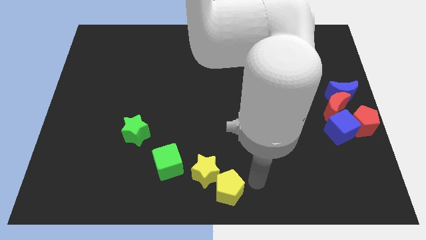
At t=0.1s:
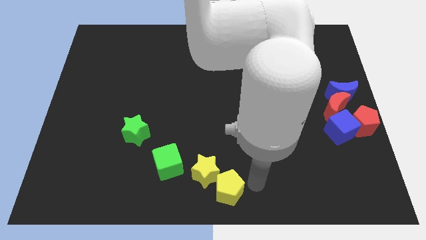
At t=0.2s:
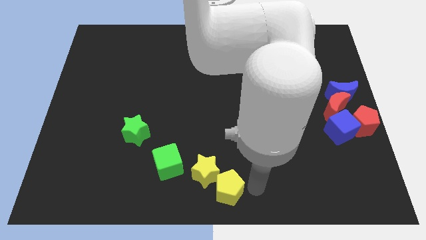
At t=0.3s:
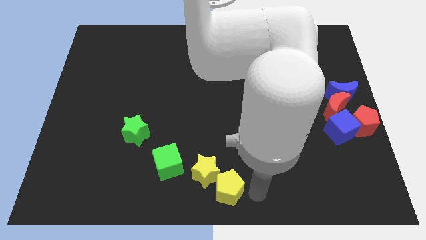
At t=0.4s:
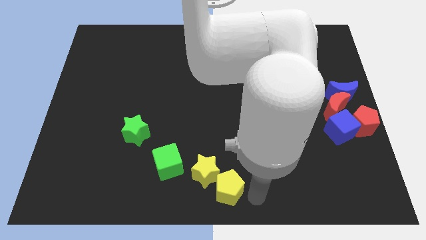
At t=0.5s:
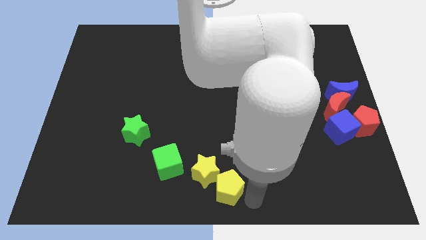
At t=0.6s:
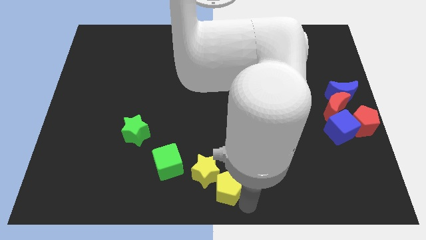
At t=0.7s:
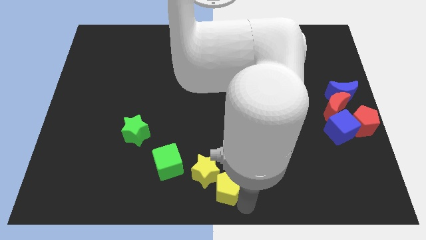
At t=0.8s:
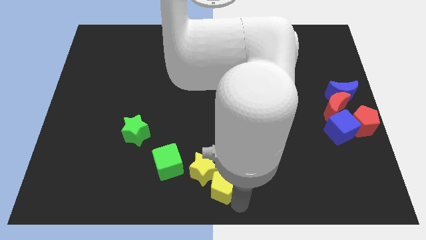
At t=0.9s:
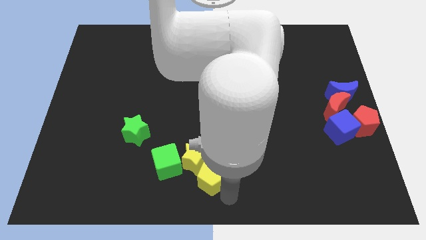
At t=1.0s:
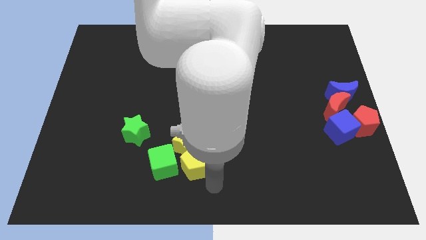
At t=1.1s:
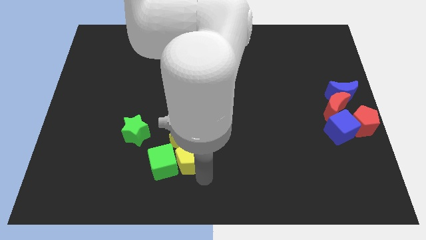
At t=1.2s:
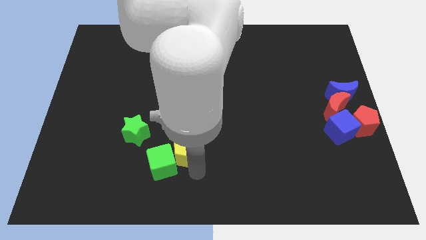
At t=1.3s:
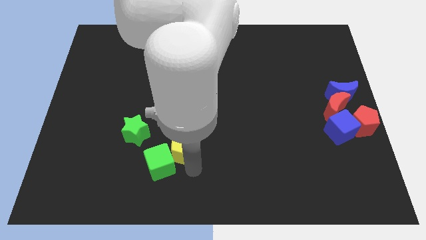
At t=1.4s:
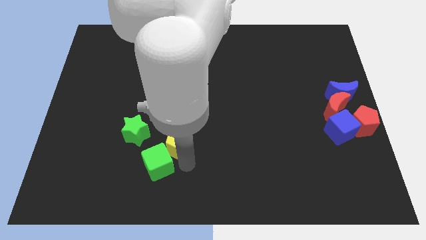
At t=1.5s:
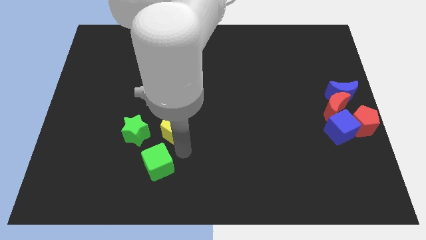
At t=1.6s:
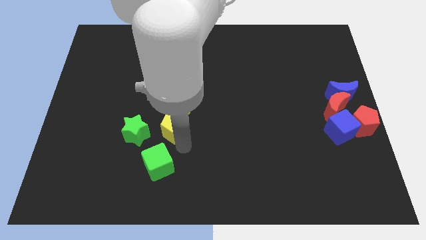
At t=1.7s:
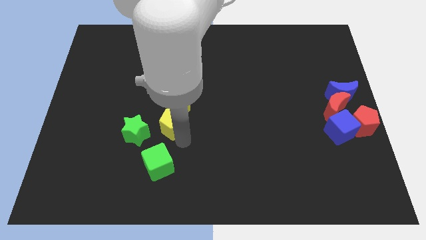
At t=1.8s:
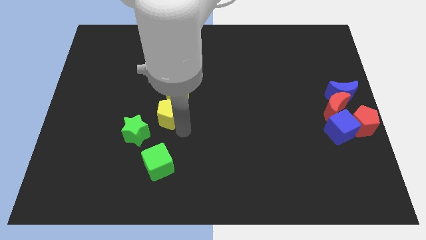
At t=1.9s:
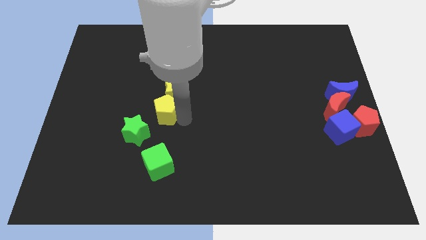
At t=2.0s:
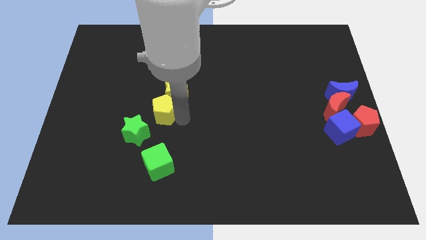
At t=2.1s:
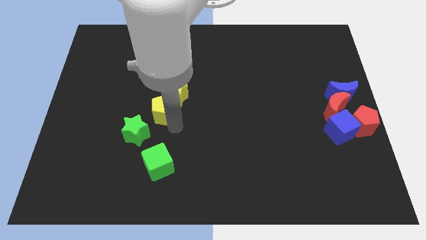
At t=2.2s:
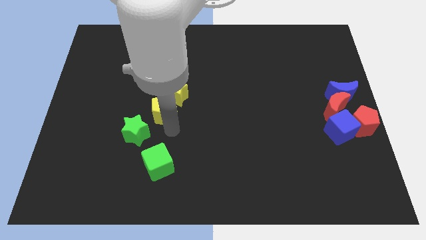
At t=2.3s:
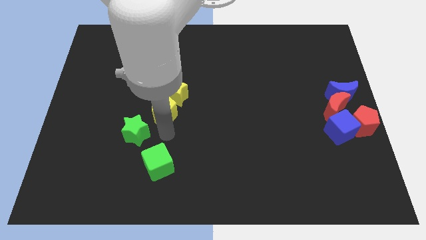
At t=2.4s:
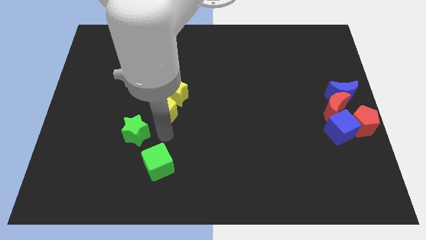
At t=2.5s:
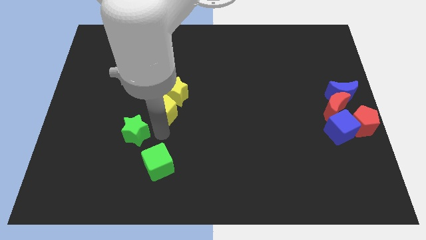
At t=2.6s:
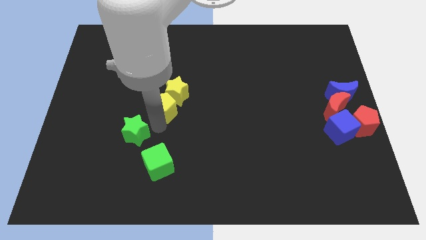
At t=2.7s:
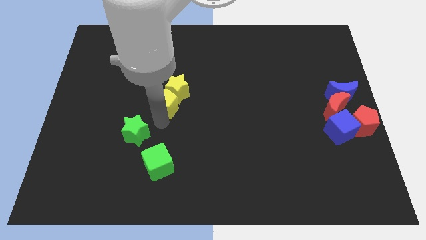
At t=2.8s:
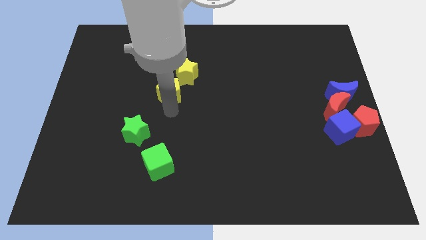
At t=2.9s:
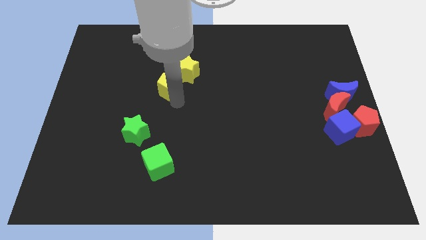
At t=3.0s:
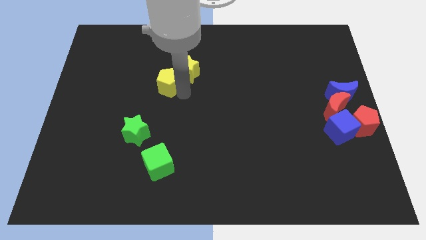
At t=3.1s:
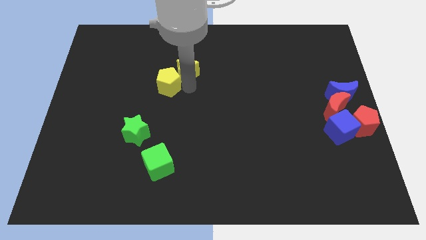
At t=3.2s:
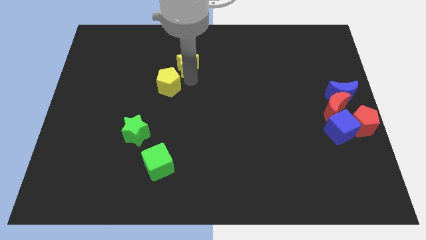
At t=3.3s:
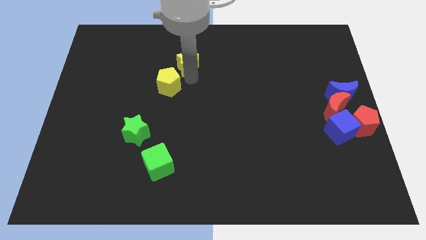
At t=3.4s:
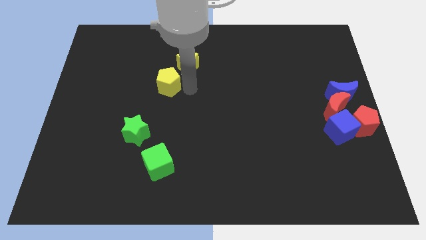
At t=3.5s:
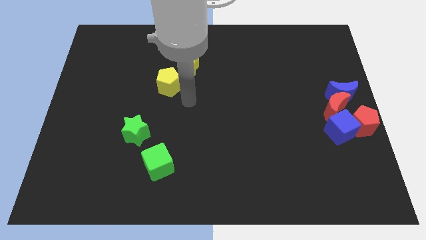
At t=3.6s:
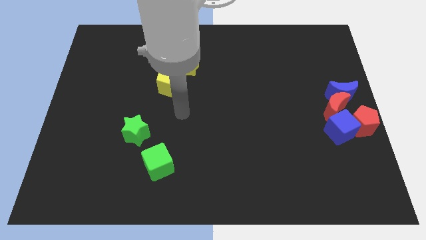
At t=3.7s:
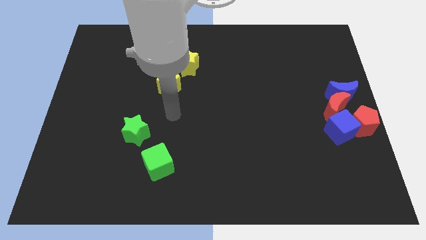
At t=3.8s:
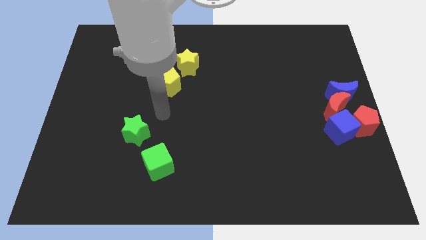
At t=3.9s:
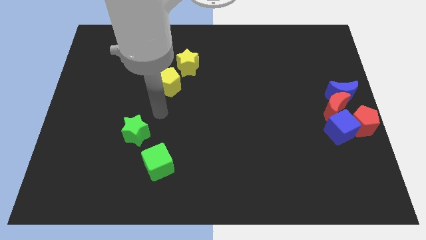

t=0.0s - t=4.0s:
push the yellow pentagon into the yellow star

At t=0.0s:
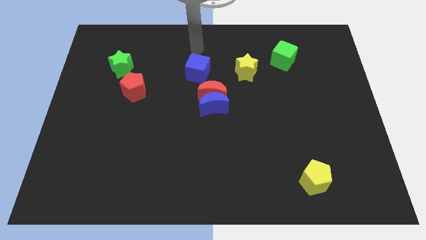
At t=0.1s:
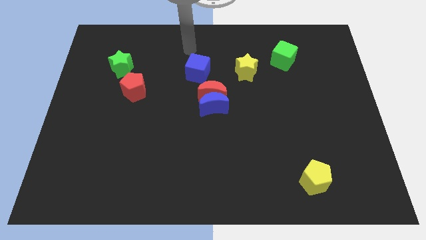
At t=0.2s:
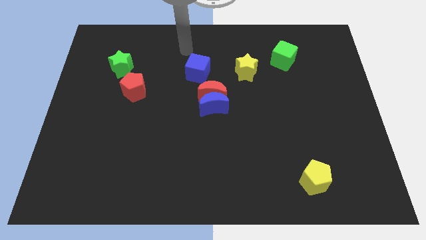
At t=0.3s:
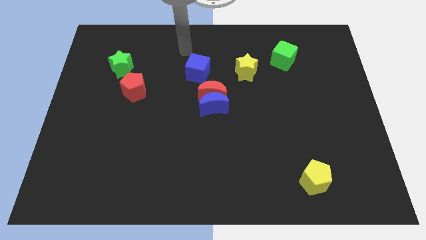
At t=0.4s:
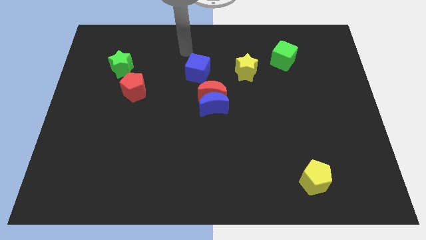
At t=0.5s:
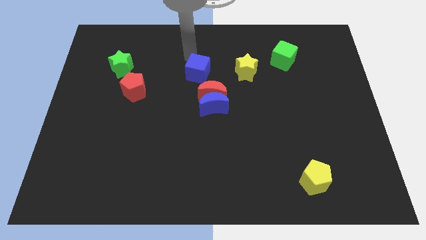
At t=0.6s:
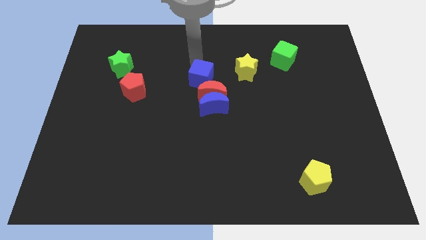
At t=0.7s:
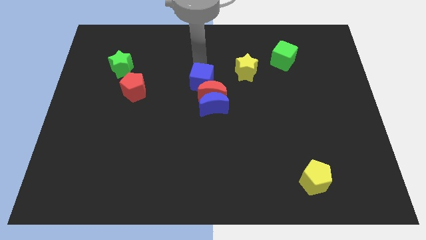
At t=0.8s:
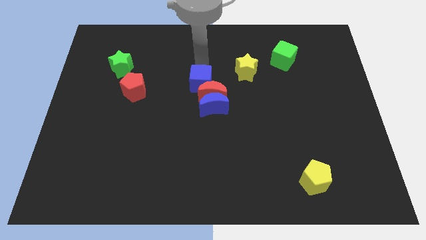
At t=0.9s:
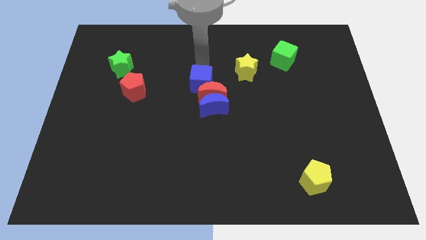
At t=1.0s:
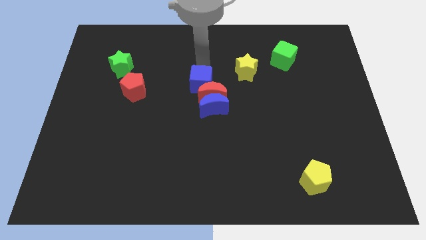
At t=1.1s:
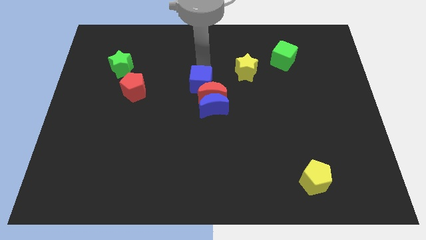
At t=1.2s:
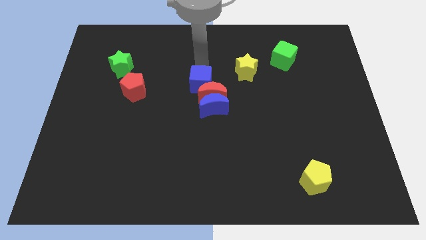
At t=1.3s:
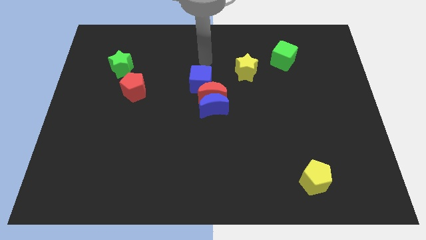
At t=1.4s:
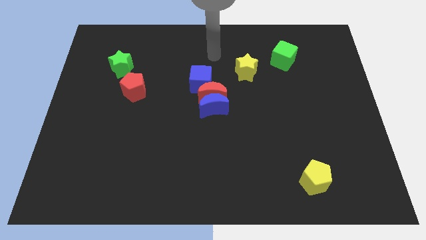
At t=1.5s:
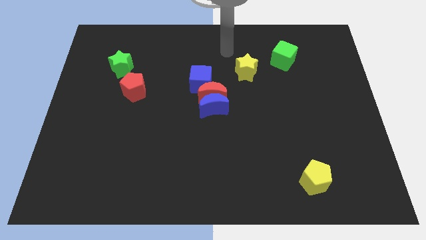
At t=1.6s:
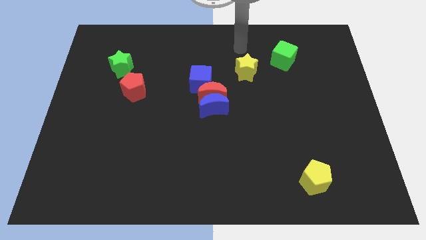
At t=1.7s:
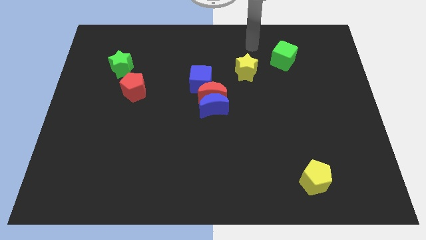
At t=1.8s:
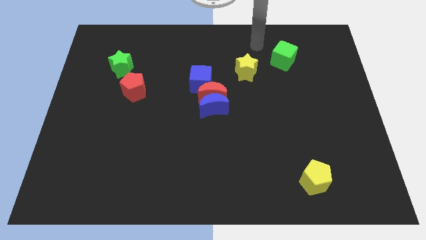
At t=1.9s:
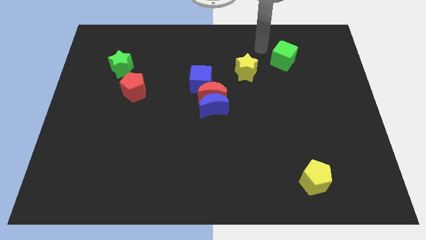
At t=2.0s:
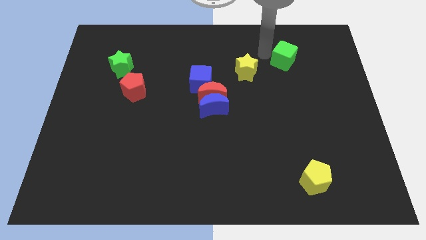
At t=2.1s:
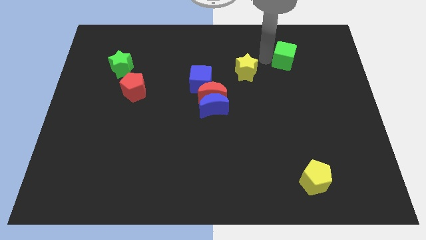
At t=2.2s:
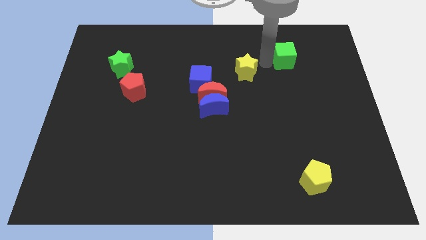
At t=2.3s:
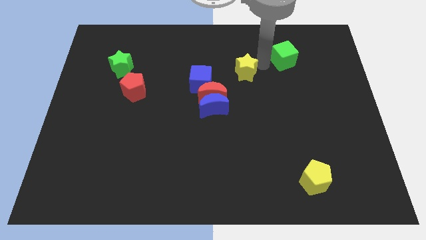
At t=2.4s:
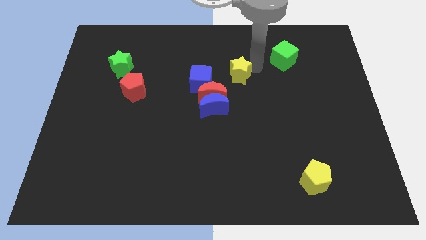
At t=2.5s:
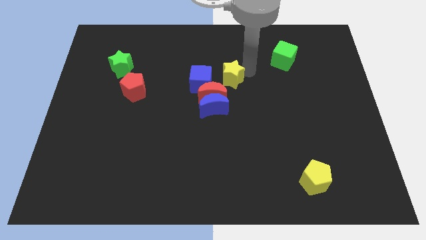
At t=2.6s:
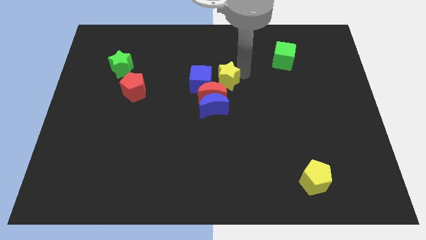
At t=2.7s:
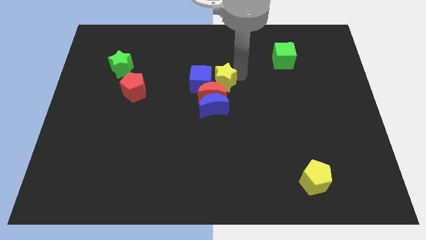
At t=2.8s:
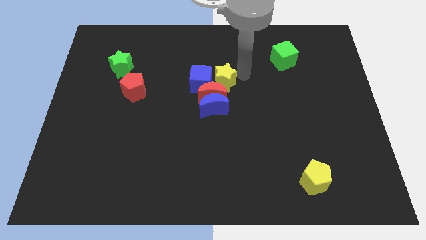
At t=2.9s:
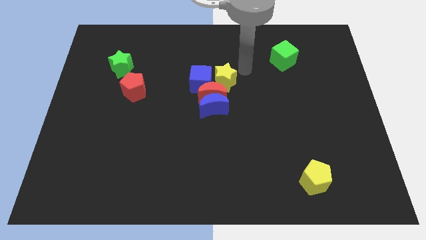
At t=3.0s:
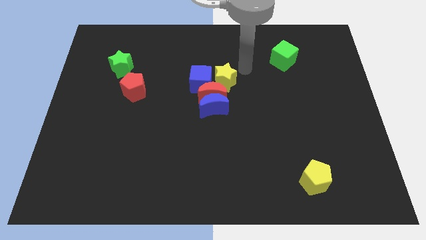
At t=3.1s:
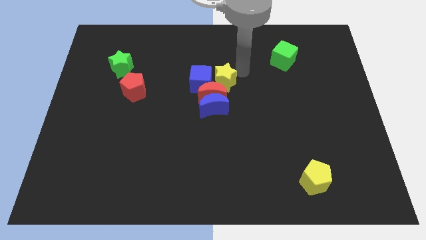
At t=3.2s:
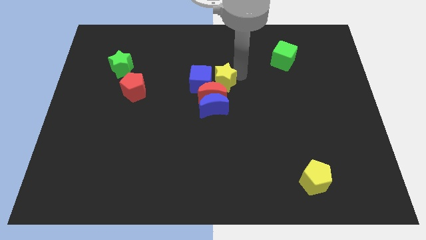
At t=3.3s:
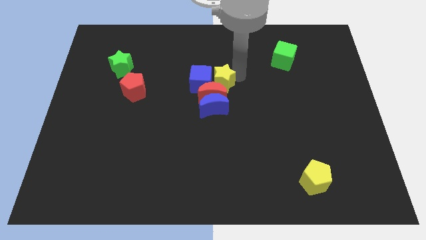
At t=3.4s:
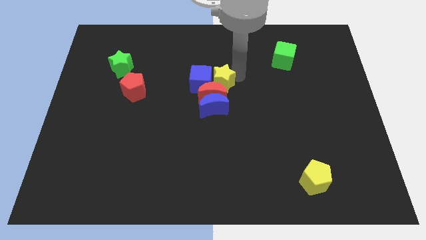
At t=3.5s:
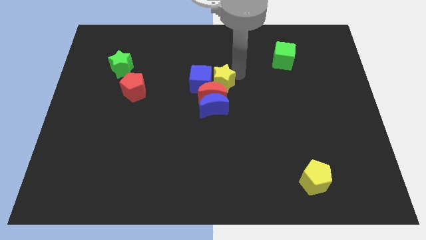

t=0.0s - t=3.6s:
move the blue block along with yellow star on top of the red crescent

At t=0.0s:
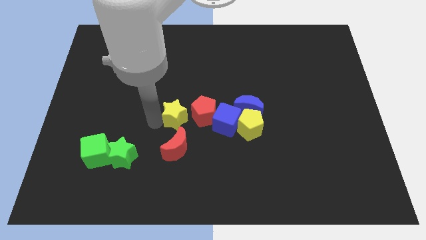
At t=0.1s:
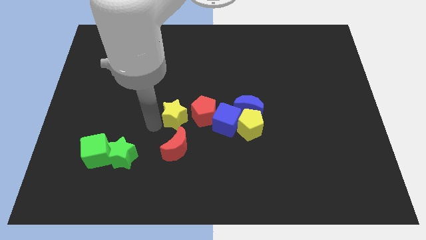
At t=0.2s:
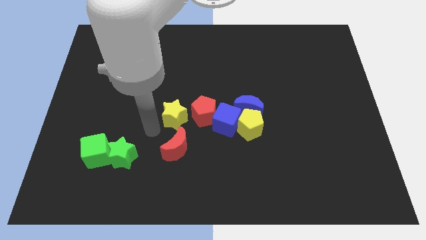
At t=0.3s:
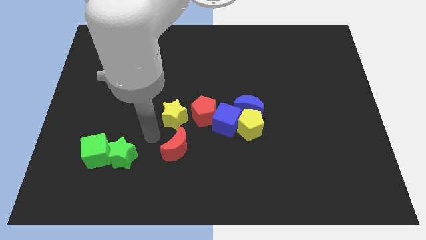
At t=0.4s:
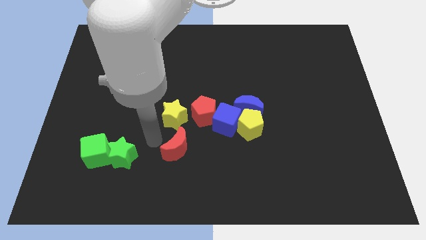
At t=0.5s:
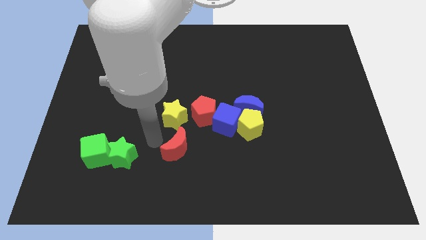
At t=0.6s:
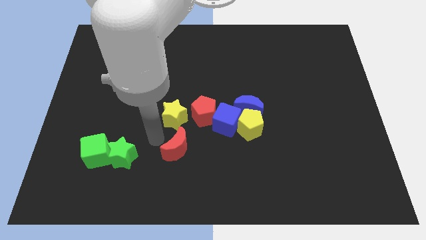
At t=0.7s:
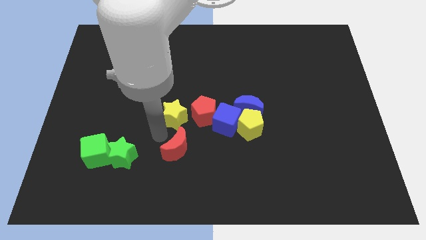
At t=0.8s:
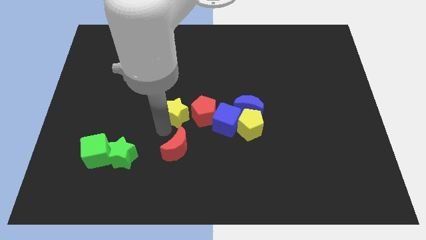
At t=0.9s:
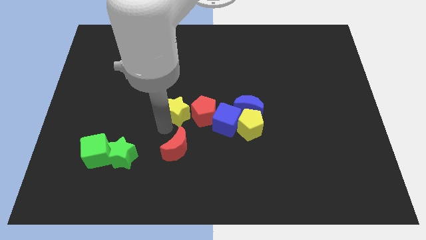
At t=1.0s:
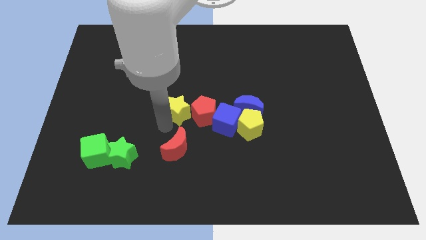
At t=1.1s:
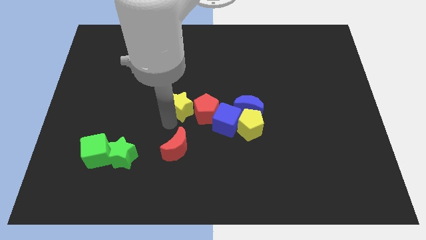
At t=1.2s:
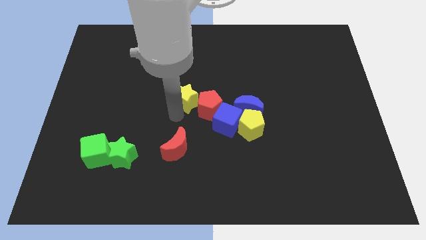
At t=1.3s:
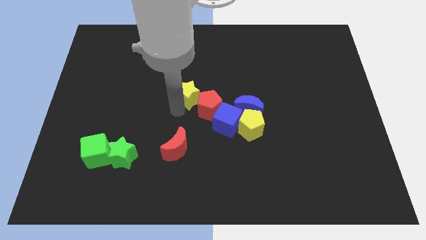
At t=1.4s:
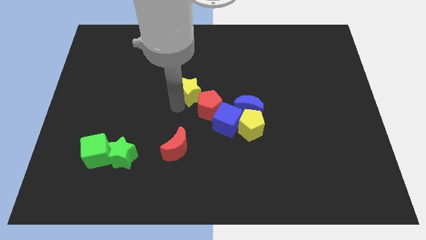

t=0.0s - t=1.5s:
push the yellow star into the right side of the red pentagon
